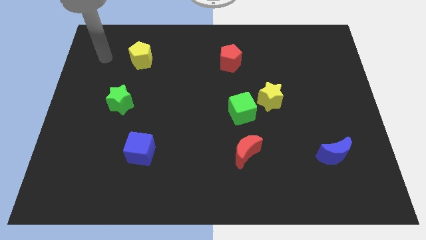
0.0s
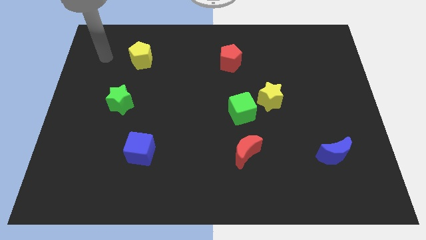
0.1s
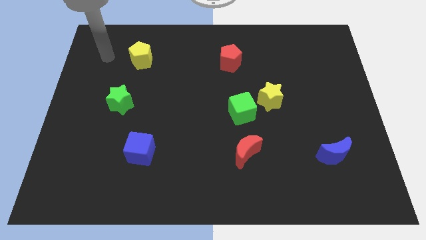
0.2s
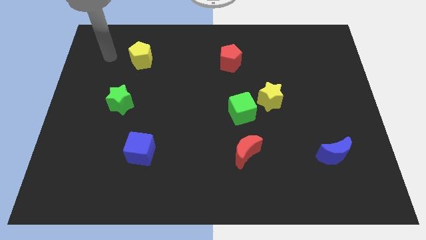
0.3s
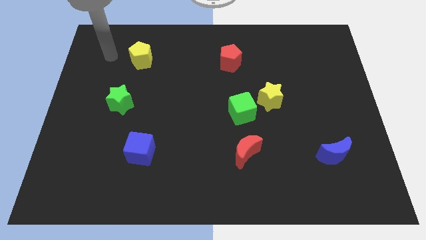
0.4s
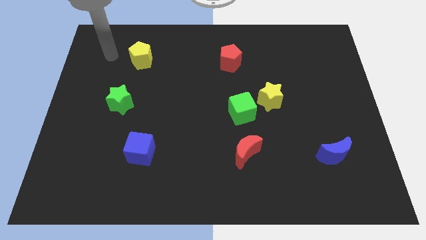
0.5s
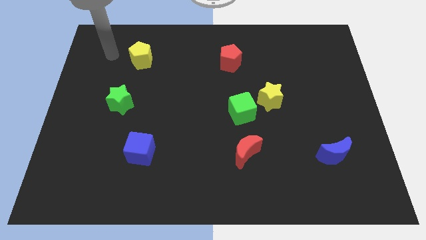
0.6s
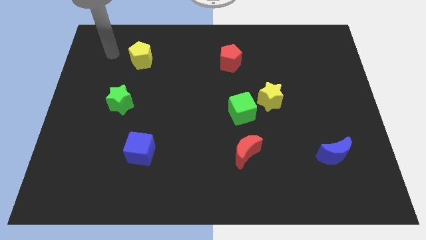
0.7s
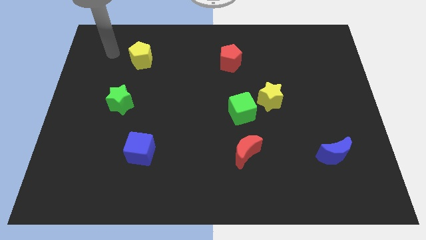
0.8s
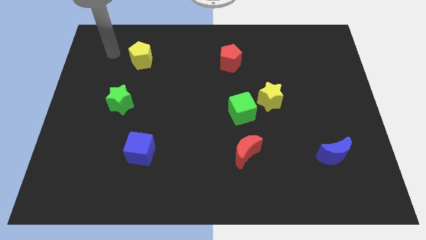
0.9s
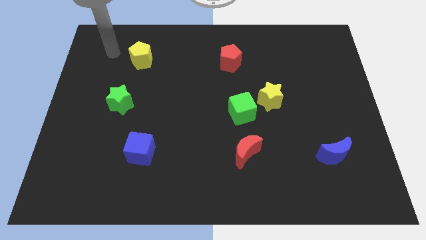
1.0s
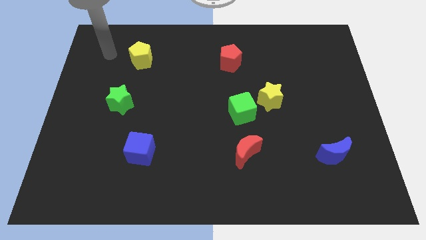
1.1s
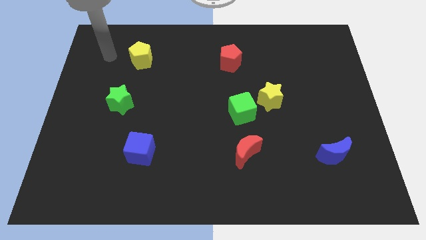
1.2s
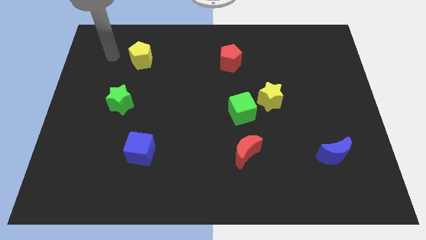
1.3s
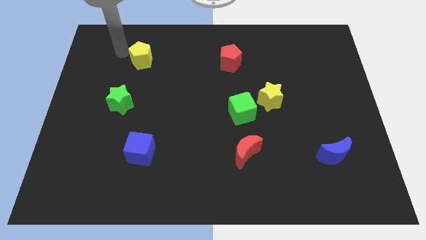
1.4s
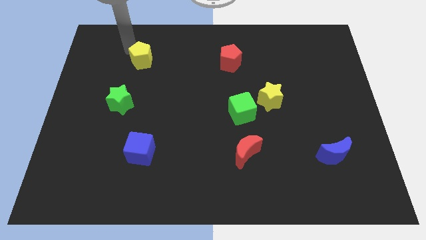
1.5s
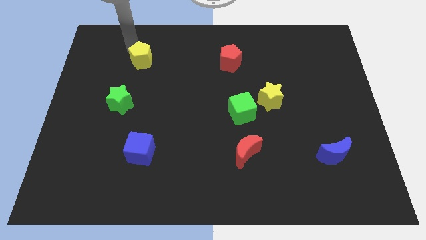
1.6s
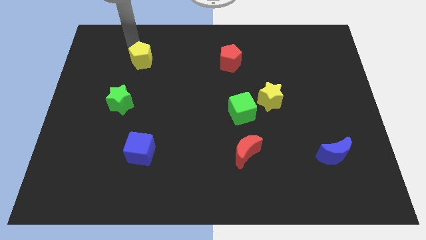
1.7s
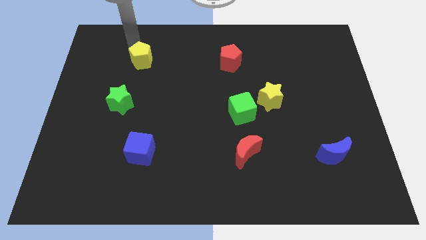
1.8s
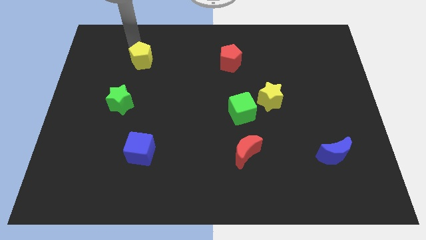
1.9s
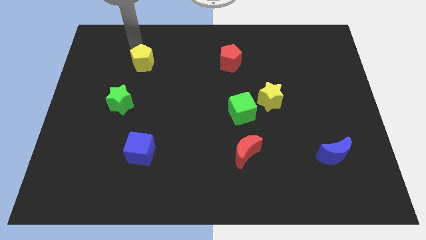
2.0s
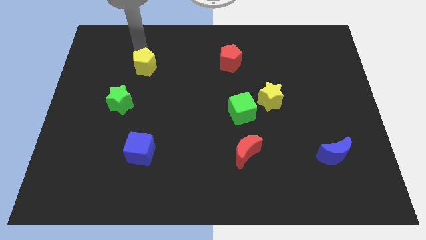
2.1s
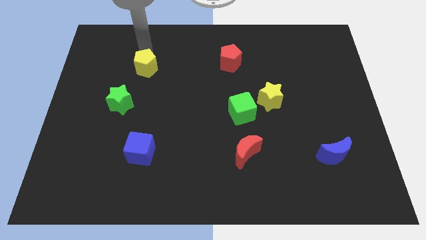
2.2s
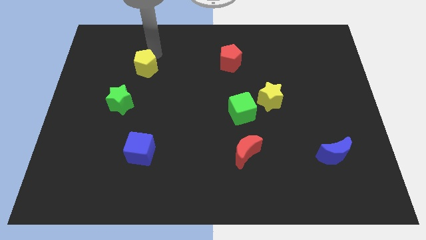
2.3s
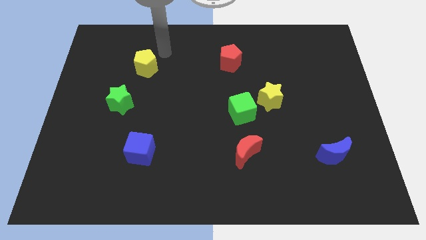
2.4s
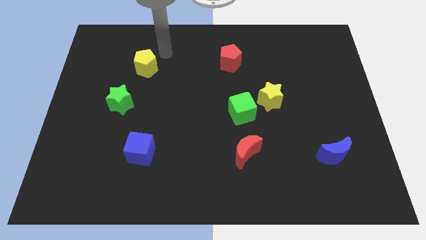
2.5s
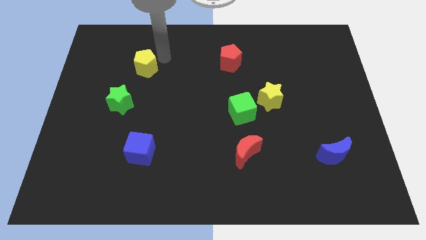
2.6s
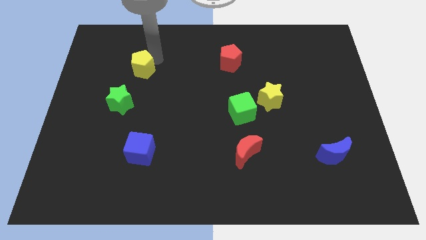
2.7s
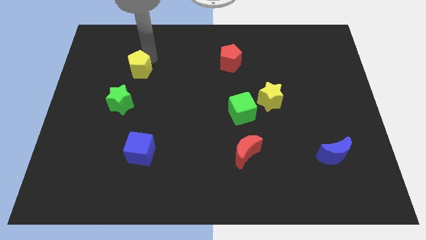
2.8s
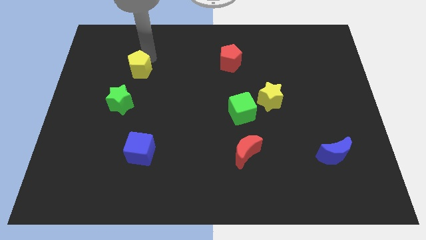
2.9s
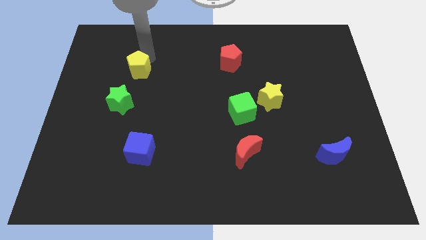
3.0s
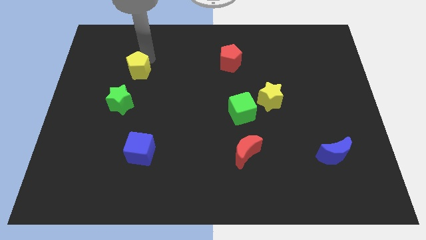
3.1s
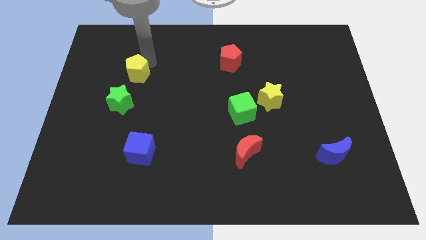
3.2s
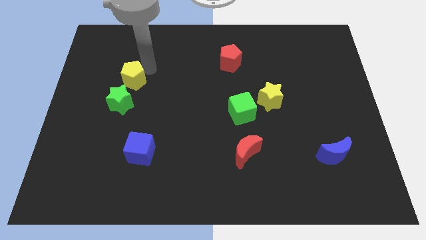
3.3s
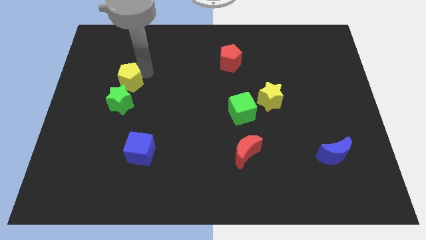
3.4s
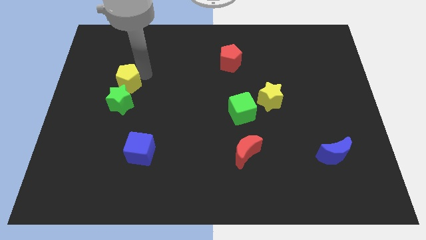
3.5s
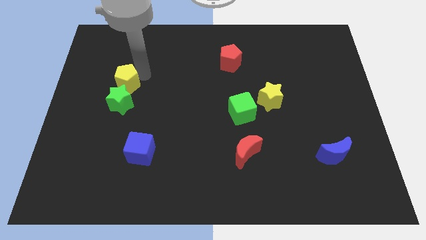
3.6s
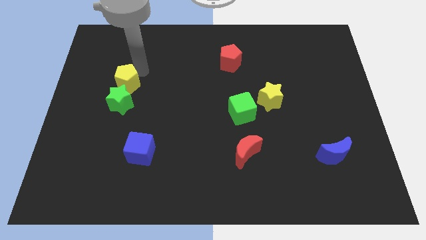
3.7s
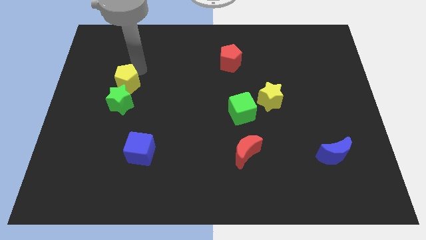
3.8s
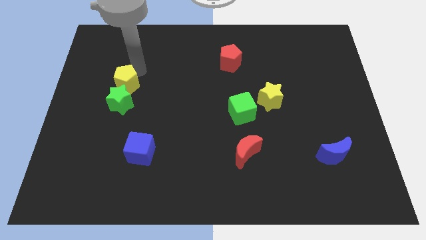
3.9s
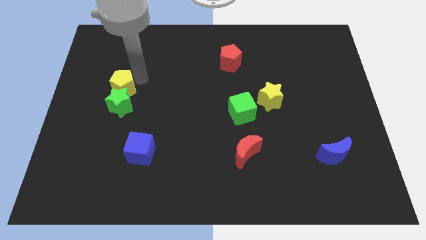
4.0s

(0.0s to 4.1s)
move yellow pentagon into the green star

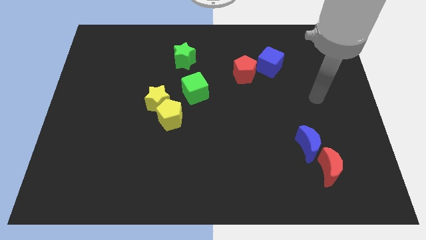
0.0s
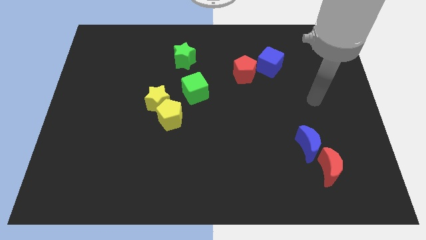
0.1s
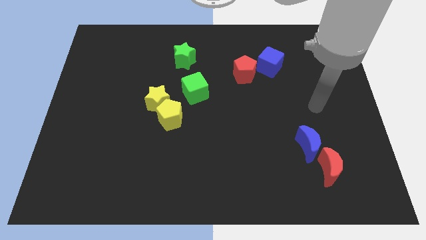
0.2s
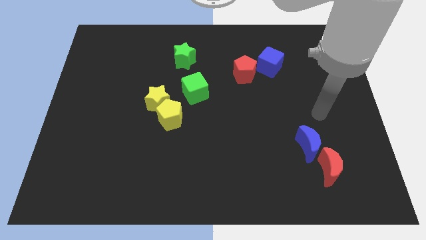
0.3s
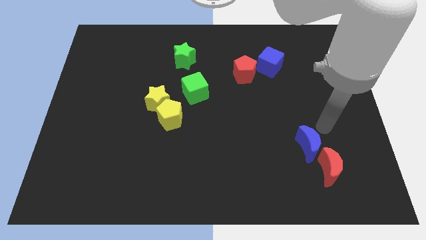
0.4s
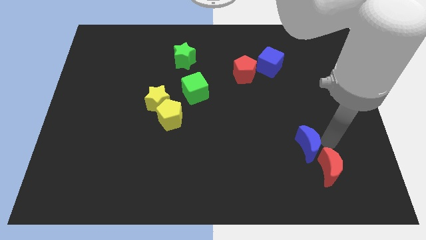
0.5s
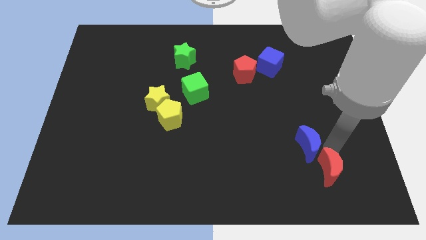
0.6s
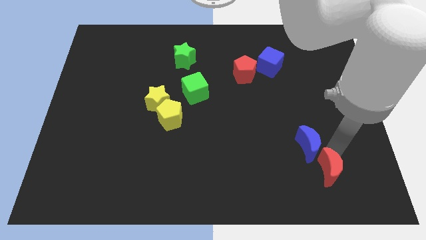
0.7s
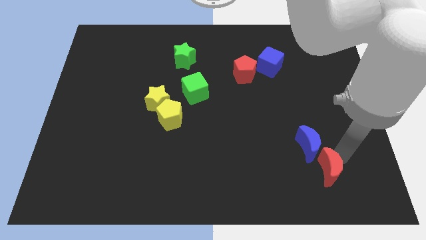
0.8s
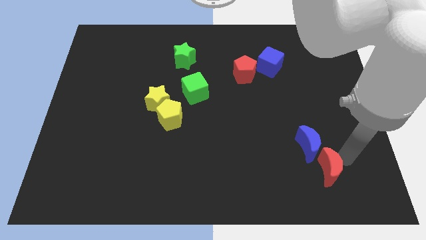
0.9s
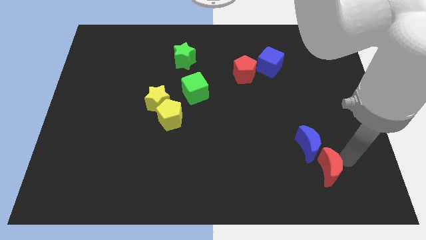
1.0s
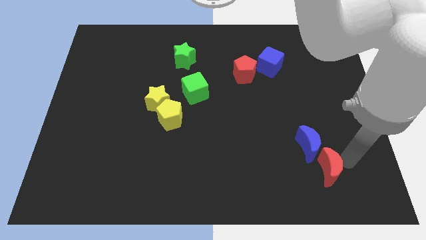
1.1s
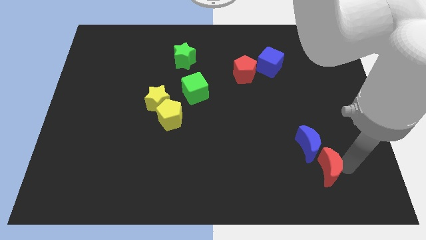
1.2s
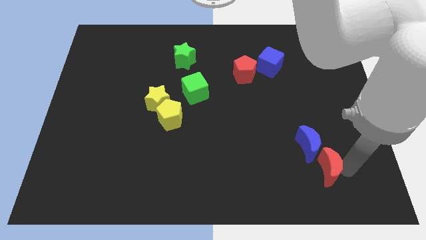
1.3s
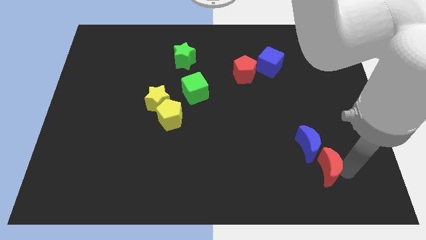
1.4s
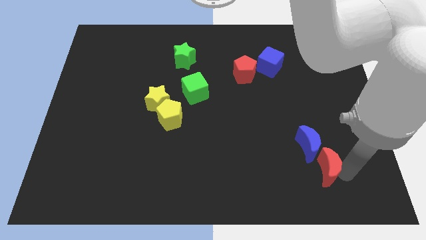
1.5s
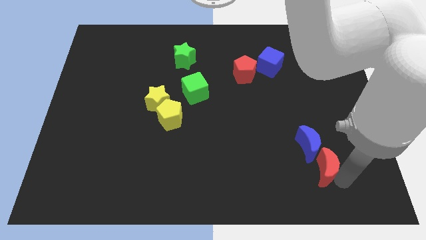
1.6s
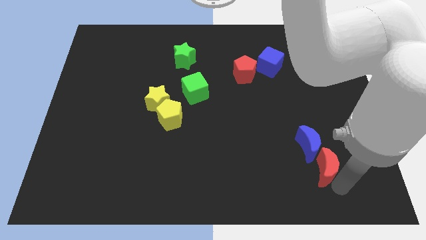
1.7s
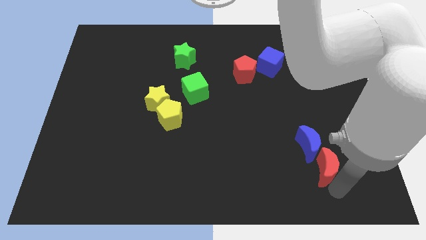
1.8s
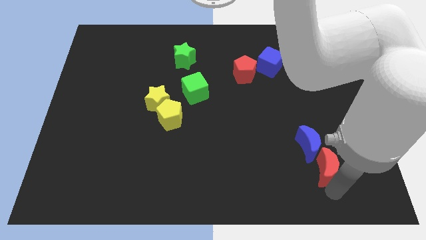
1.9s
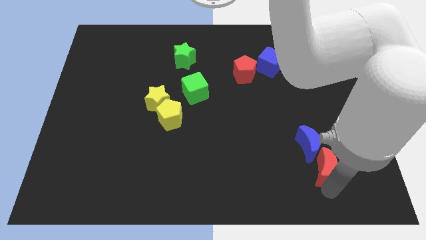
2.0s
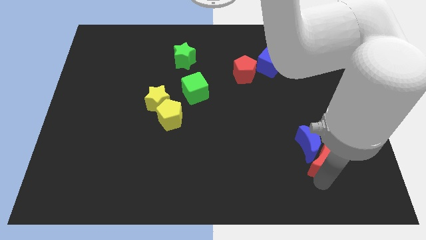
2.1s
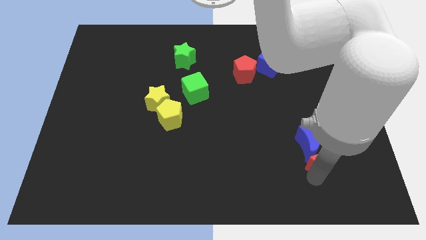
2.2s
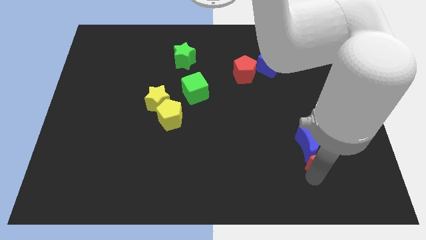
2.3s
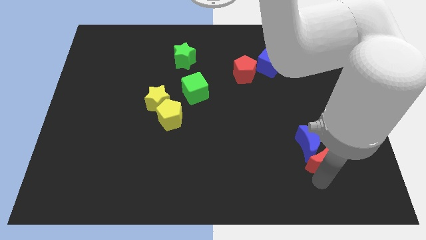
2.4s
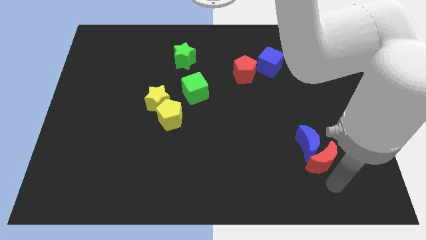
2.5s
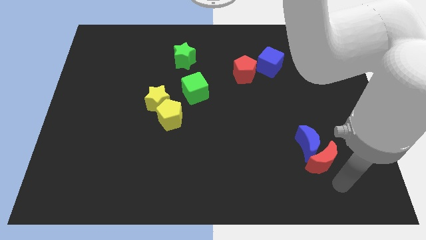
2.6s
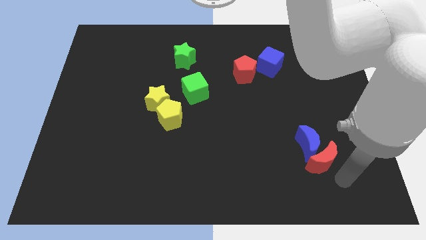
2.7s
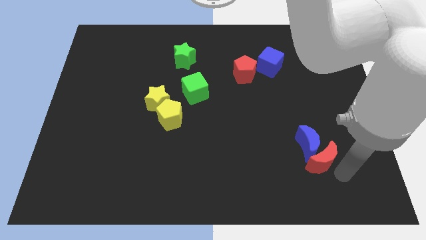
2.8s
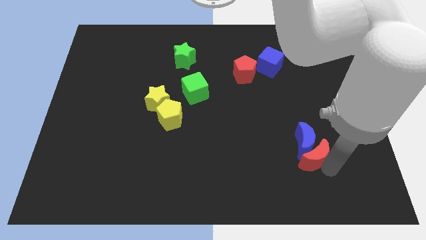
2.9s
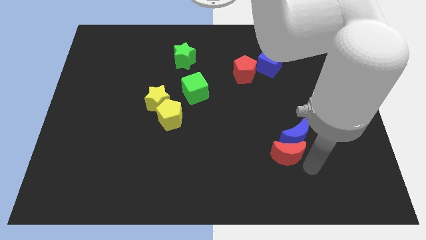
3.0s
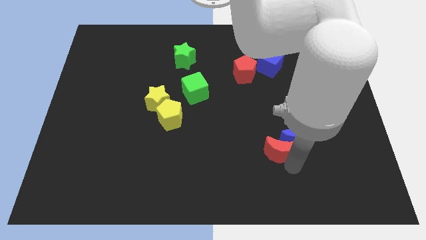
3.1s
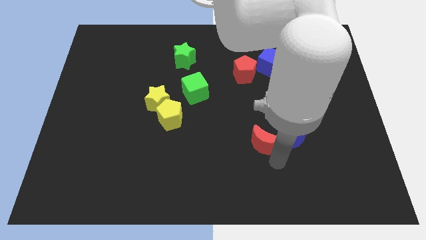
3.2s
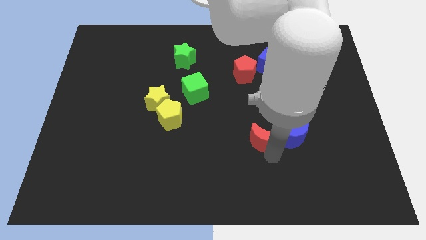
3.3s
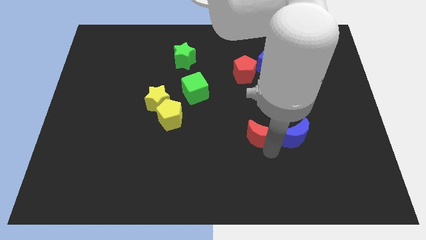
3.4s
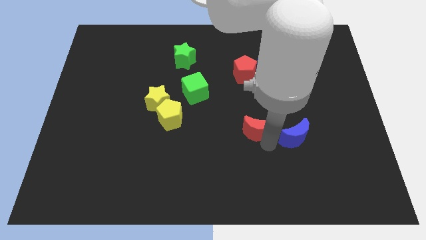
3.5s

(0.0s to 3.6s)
move the red crescent to the left of the blue crescent

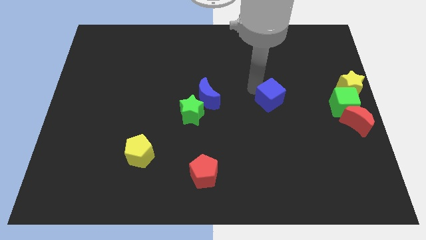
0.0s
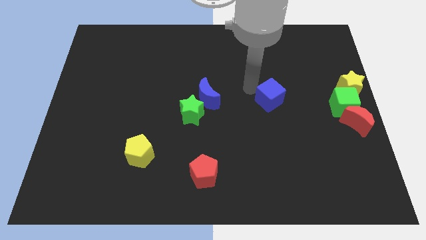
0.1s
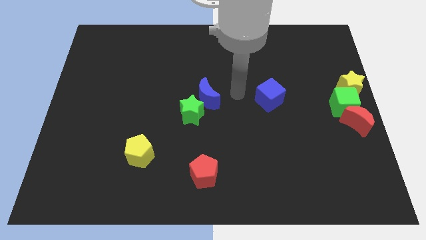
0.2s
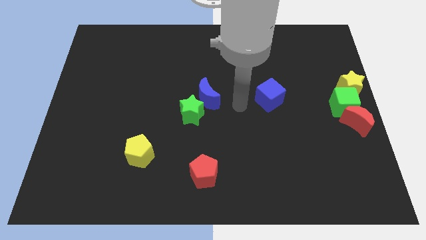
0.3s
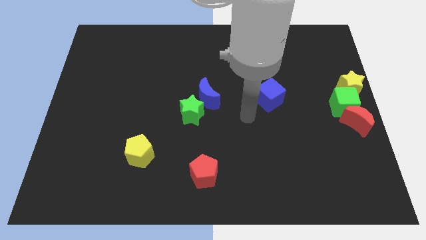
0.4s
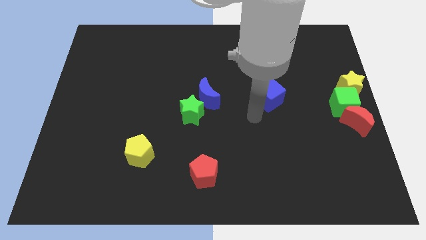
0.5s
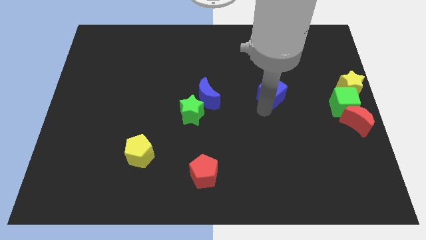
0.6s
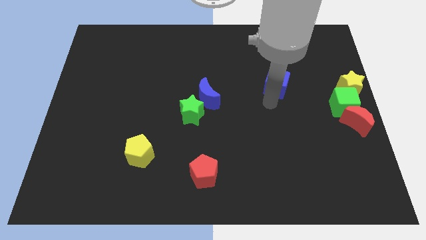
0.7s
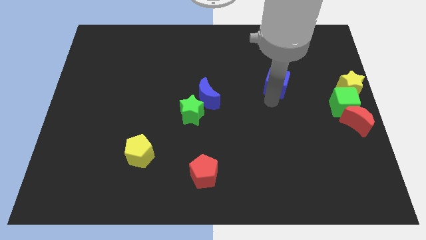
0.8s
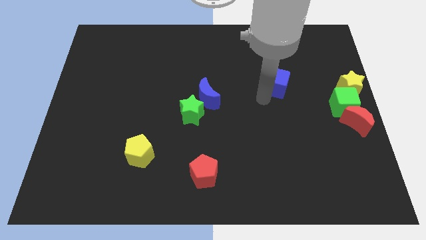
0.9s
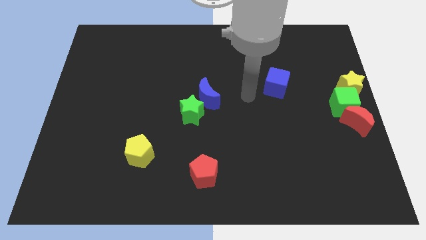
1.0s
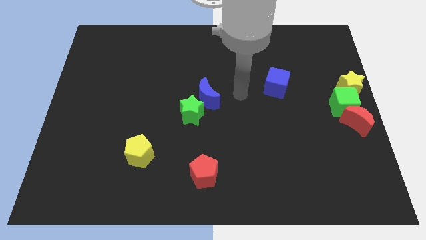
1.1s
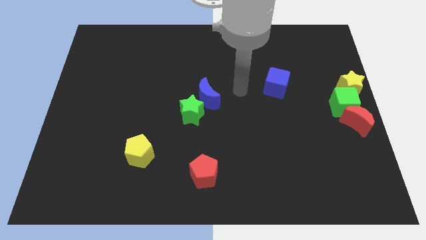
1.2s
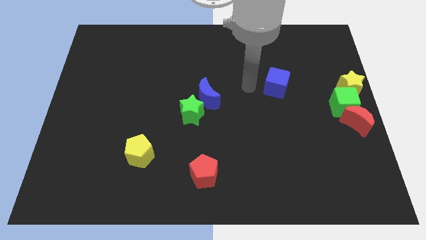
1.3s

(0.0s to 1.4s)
slightly move the blue cube towards the top
